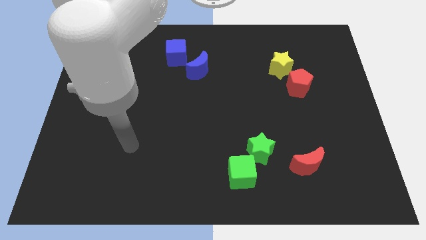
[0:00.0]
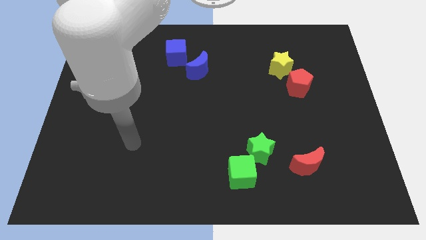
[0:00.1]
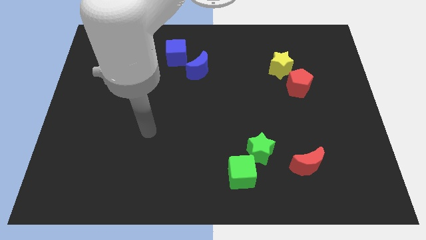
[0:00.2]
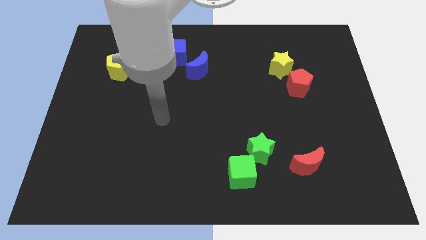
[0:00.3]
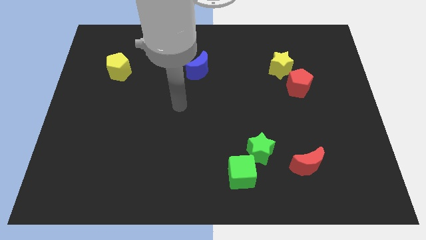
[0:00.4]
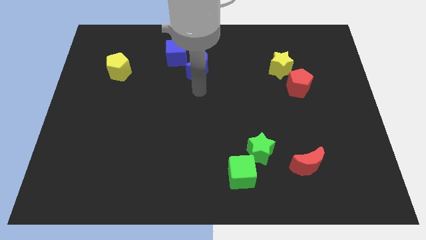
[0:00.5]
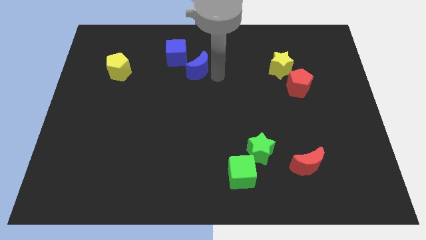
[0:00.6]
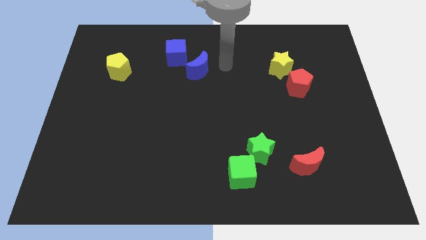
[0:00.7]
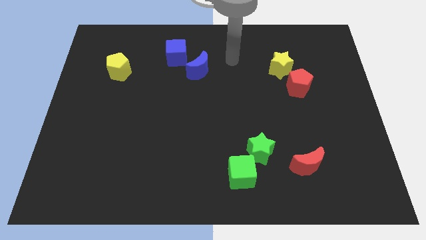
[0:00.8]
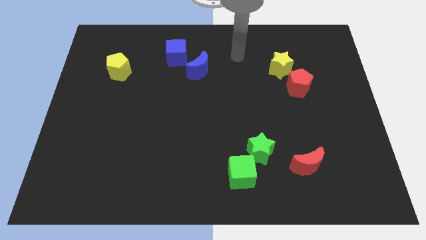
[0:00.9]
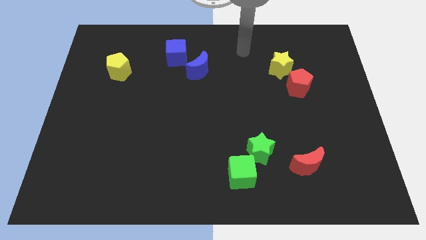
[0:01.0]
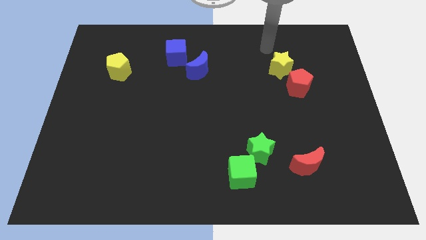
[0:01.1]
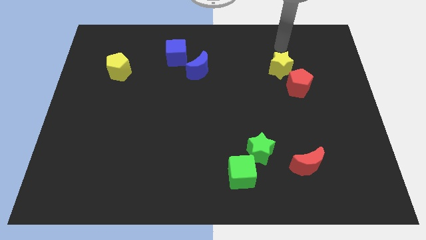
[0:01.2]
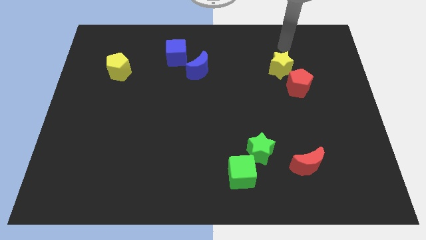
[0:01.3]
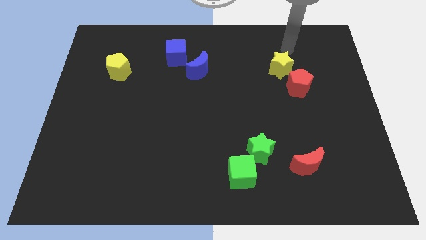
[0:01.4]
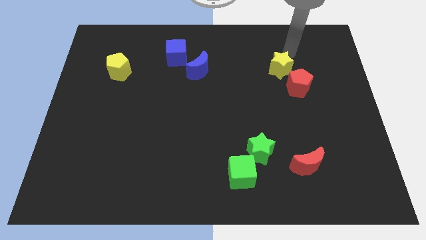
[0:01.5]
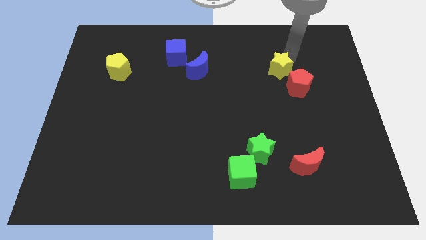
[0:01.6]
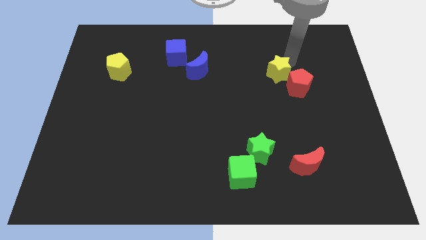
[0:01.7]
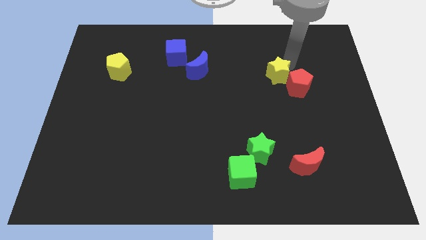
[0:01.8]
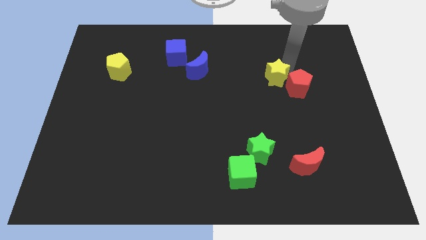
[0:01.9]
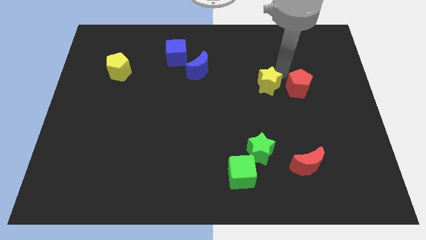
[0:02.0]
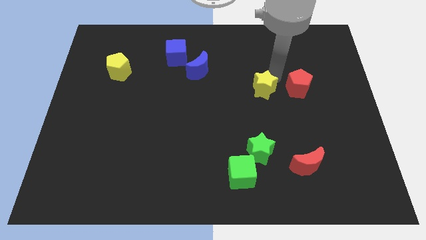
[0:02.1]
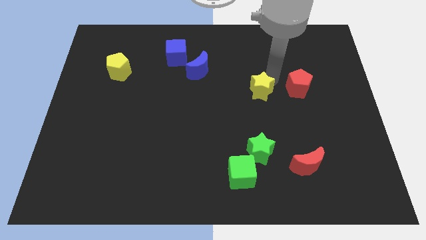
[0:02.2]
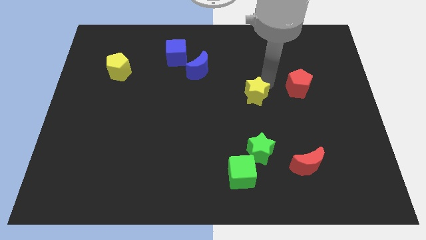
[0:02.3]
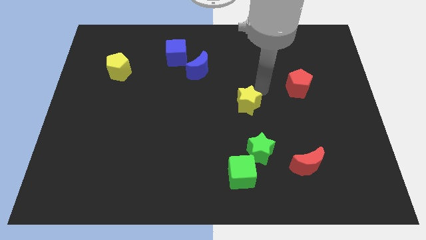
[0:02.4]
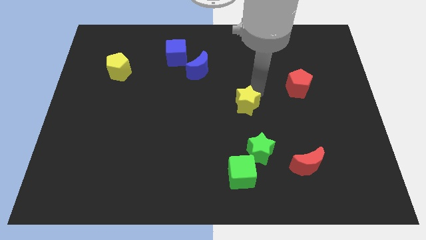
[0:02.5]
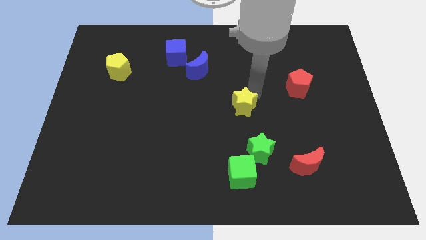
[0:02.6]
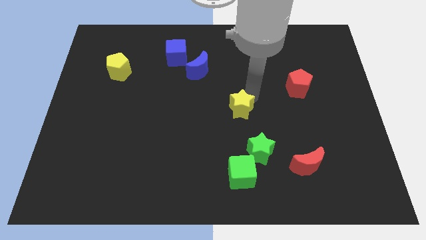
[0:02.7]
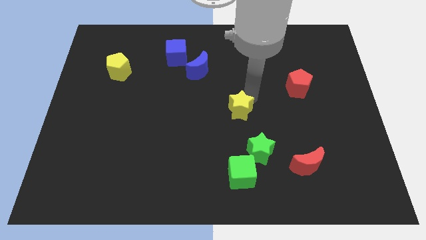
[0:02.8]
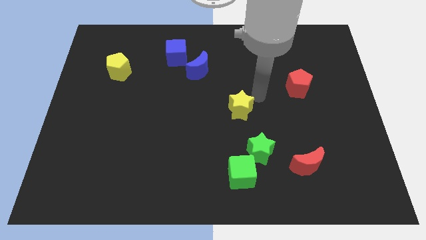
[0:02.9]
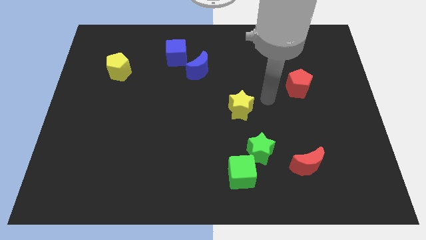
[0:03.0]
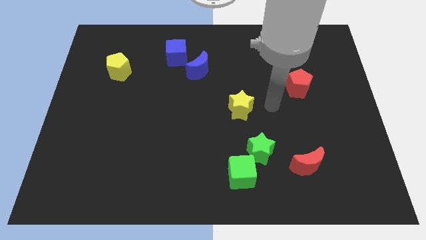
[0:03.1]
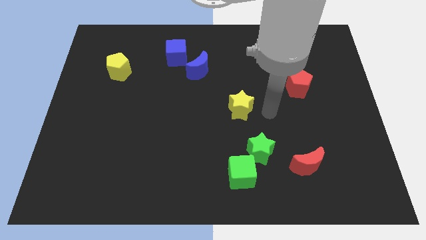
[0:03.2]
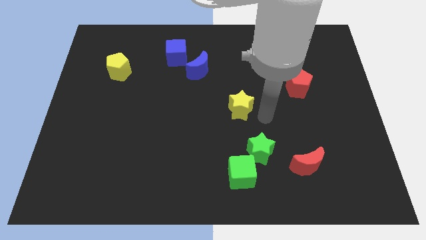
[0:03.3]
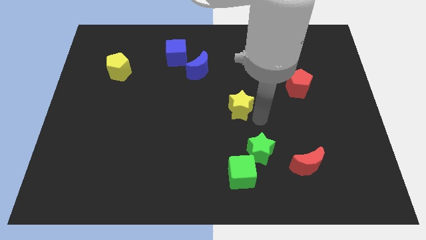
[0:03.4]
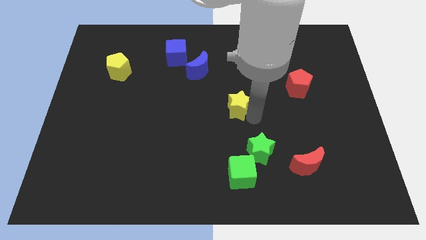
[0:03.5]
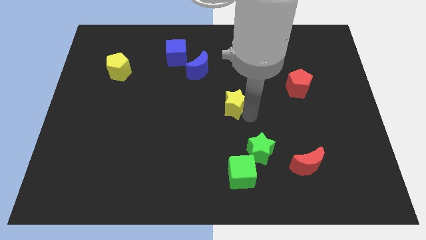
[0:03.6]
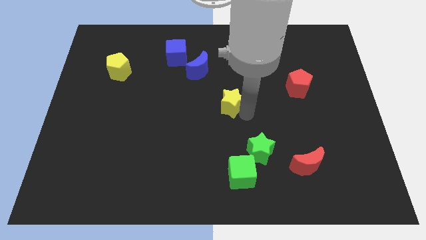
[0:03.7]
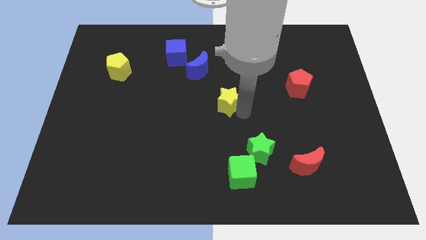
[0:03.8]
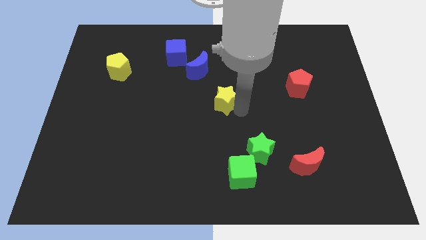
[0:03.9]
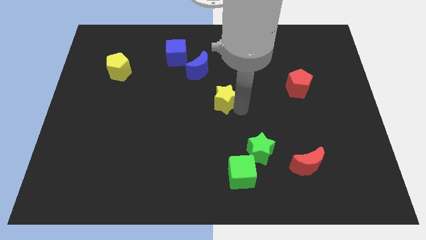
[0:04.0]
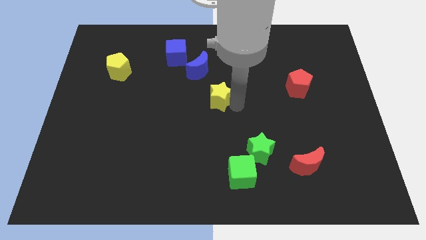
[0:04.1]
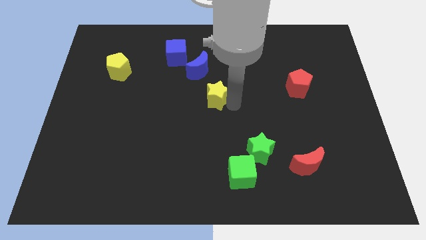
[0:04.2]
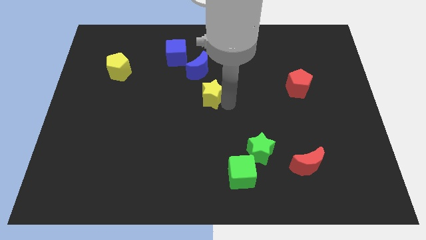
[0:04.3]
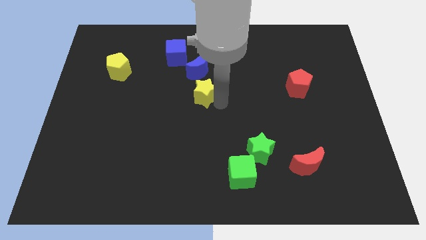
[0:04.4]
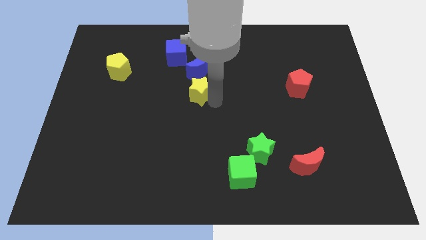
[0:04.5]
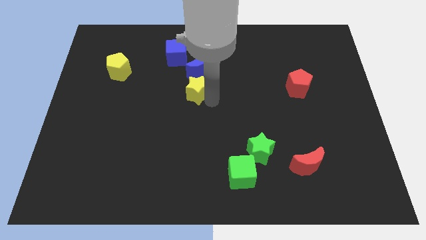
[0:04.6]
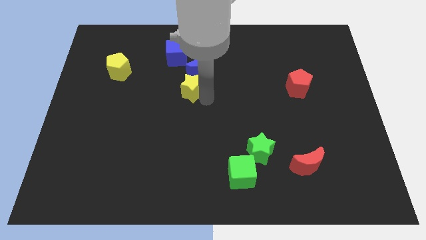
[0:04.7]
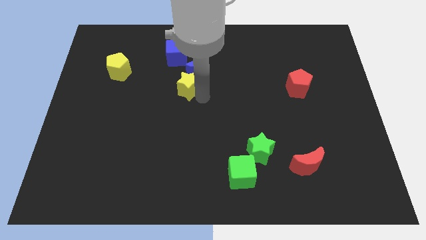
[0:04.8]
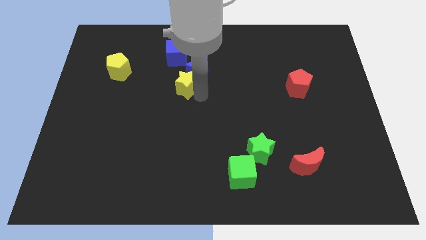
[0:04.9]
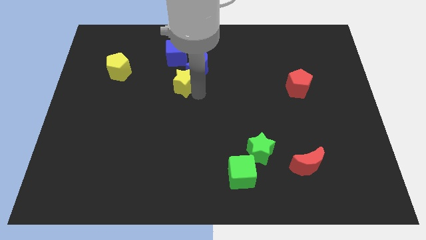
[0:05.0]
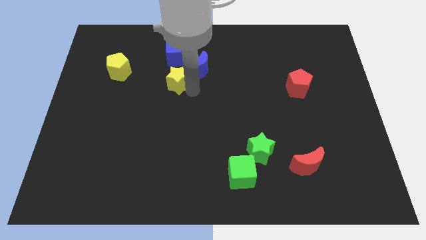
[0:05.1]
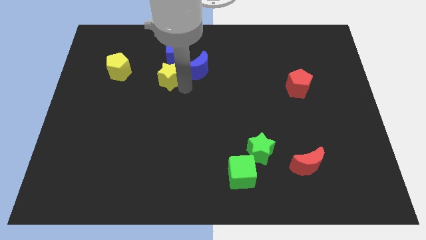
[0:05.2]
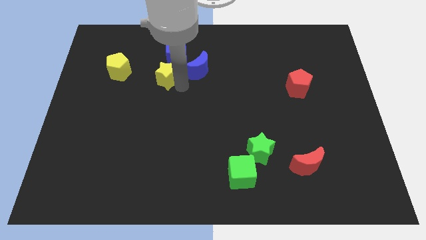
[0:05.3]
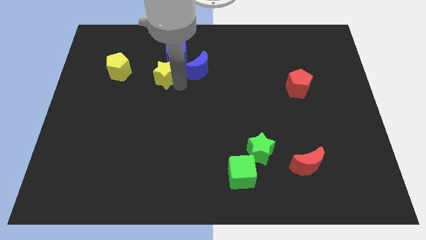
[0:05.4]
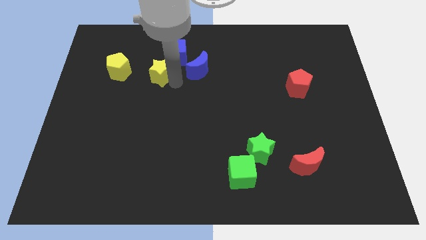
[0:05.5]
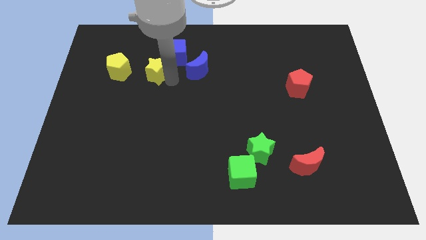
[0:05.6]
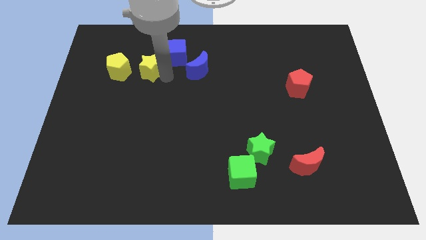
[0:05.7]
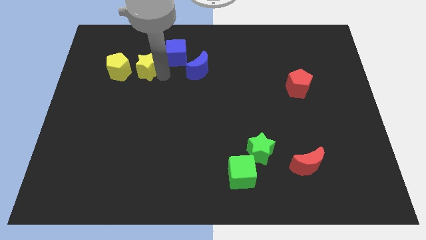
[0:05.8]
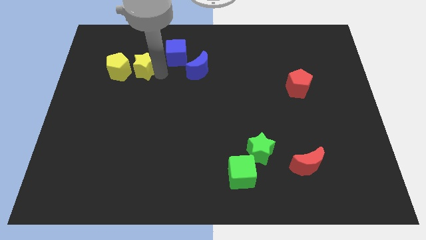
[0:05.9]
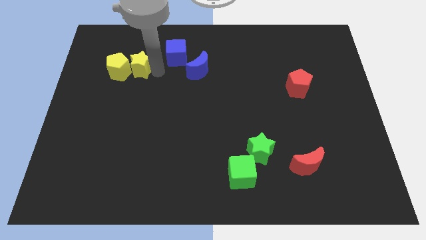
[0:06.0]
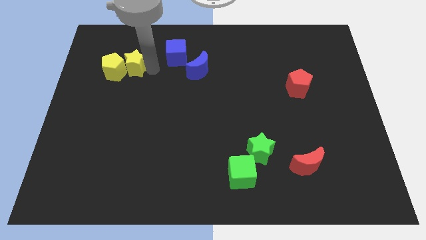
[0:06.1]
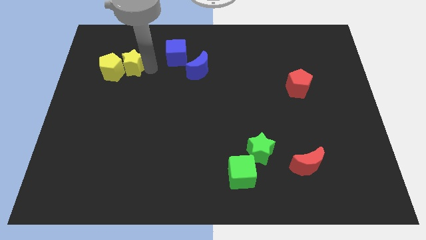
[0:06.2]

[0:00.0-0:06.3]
slide the yellow star to the yellow pentagon

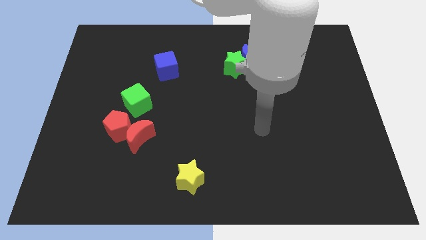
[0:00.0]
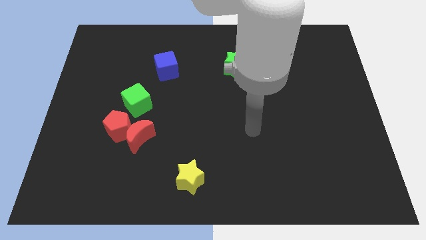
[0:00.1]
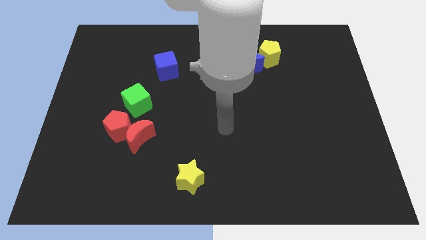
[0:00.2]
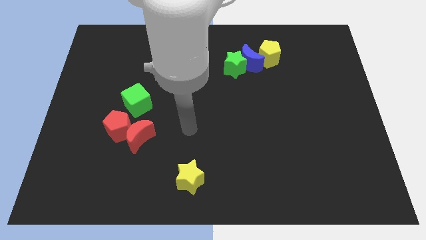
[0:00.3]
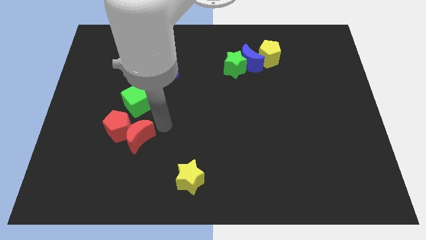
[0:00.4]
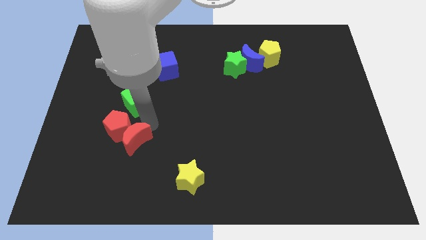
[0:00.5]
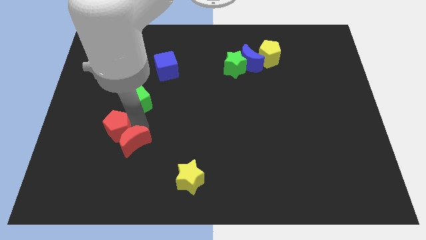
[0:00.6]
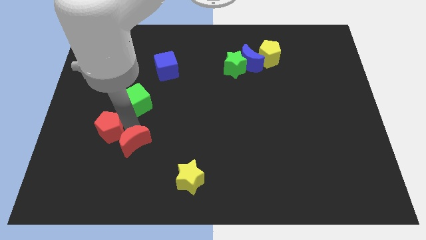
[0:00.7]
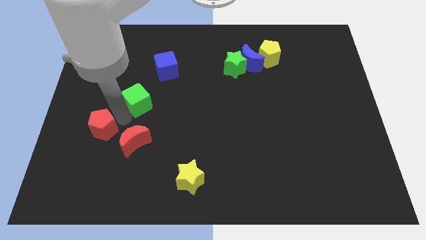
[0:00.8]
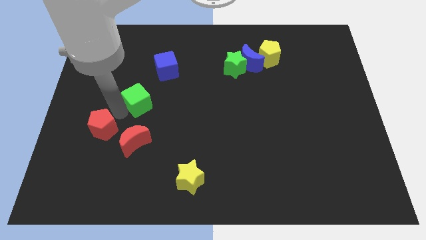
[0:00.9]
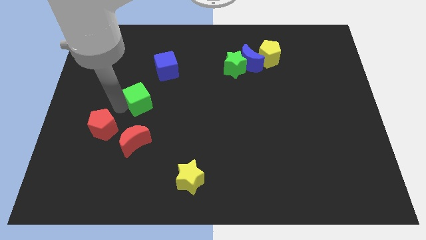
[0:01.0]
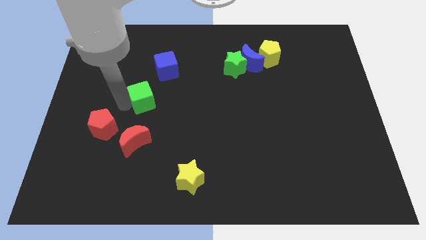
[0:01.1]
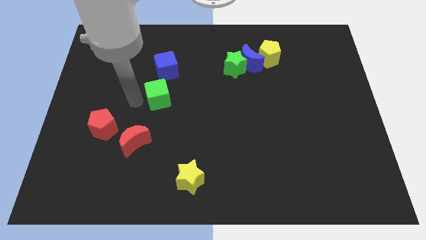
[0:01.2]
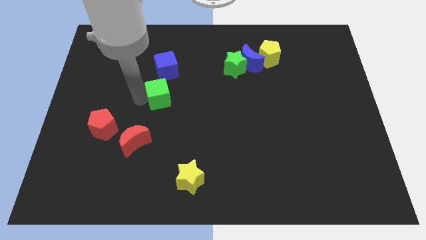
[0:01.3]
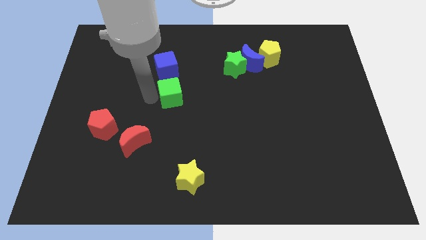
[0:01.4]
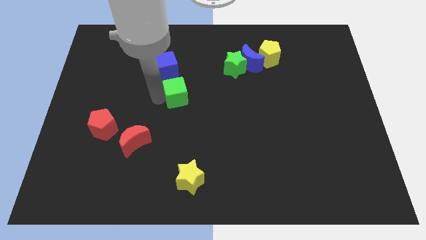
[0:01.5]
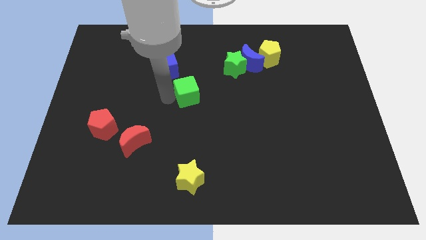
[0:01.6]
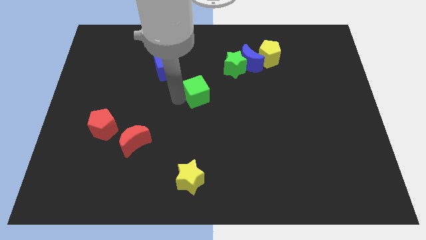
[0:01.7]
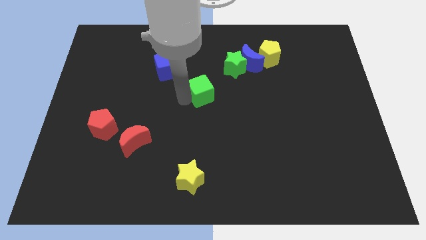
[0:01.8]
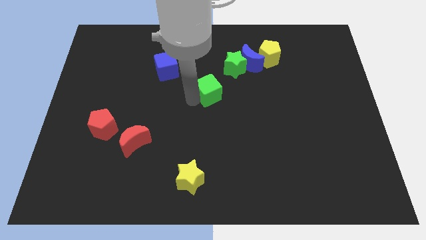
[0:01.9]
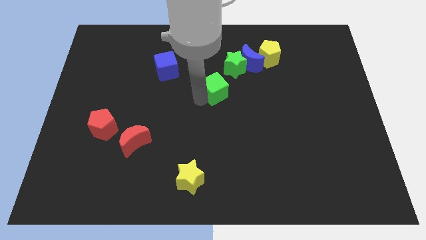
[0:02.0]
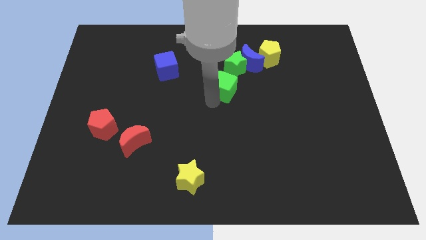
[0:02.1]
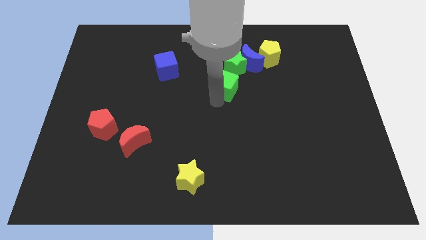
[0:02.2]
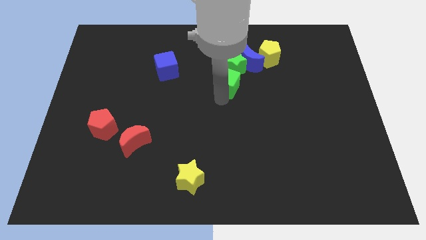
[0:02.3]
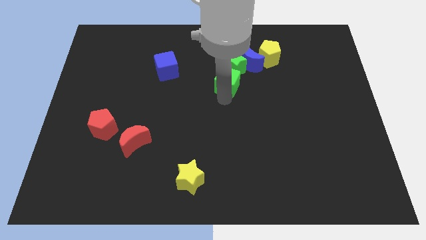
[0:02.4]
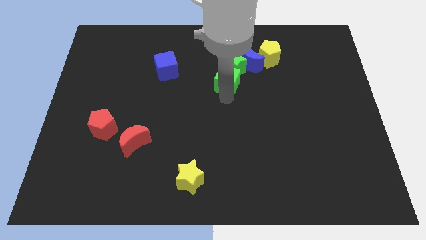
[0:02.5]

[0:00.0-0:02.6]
slide the green cube to the green star
